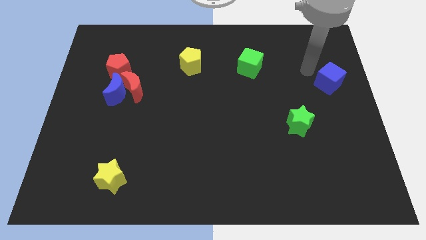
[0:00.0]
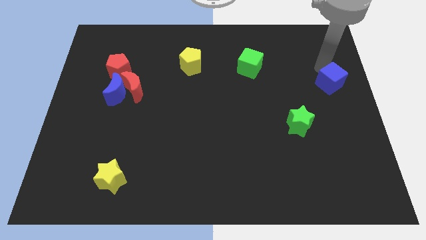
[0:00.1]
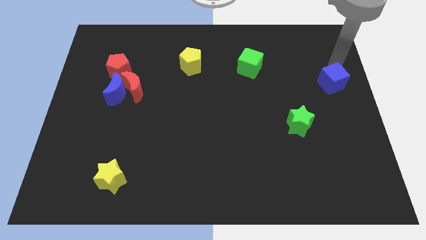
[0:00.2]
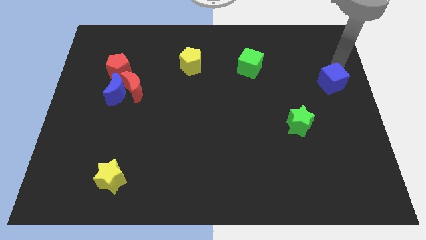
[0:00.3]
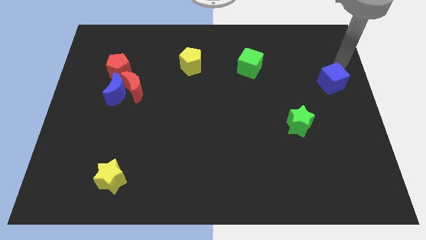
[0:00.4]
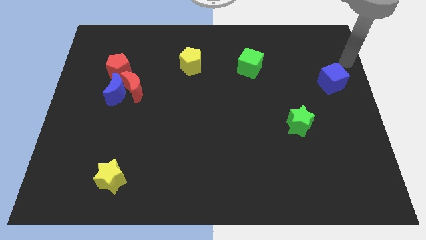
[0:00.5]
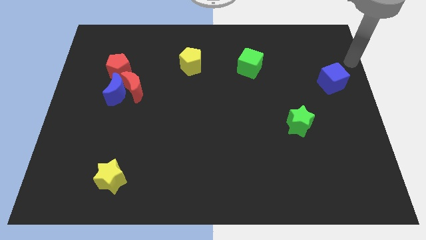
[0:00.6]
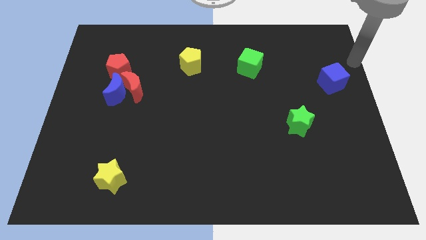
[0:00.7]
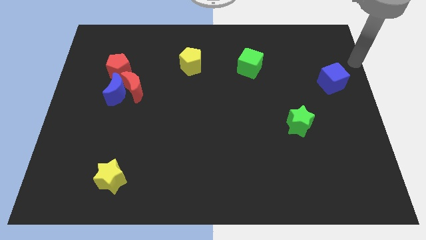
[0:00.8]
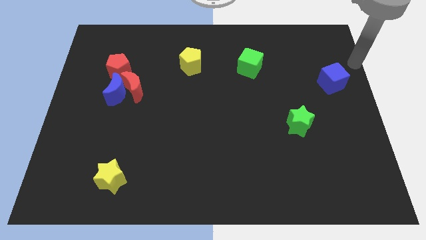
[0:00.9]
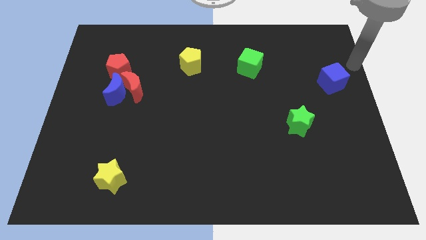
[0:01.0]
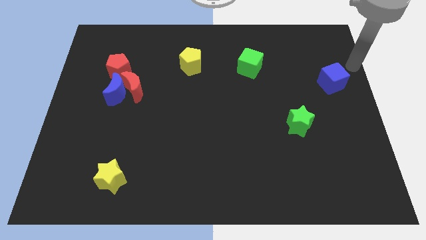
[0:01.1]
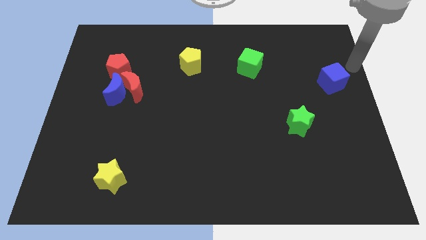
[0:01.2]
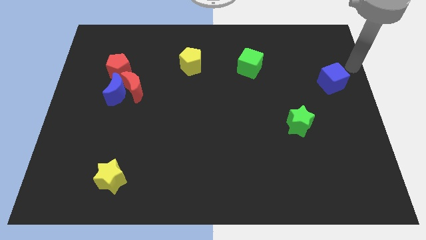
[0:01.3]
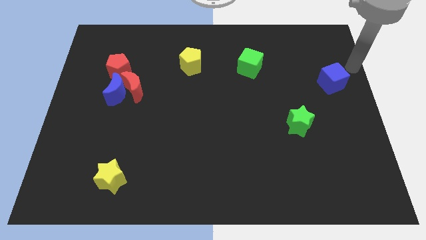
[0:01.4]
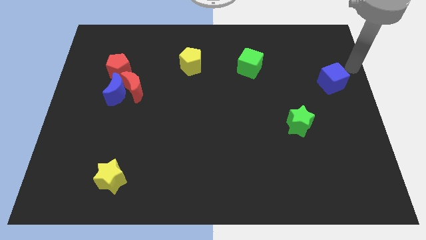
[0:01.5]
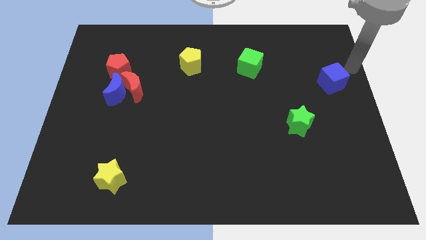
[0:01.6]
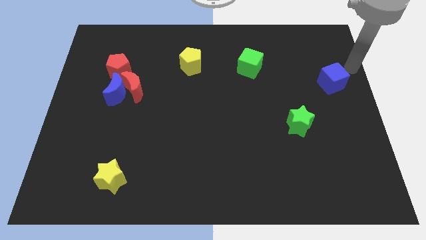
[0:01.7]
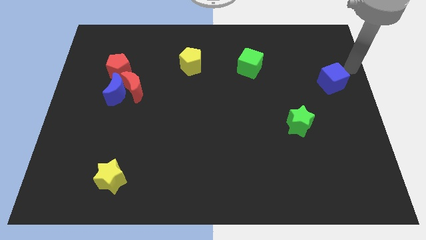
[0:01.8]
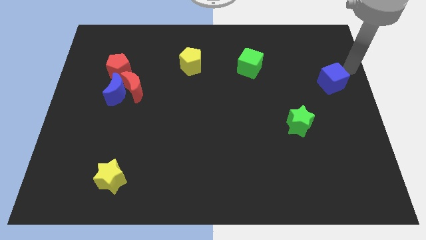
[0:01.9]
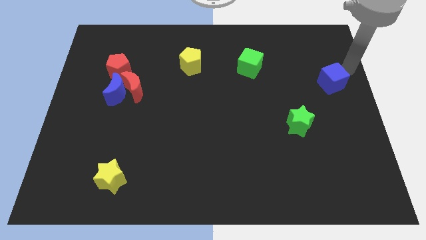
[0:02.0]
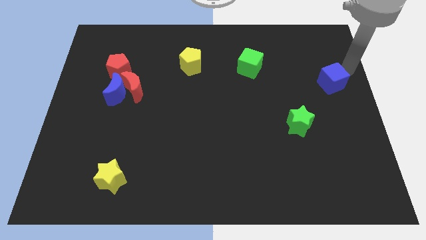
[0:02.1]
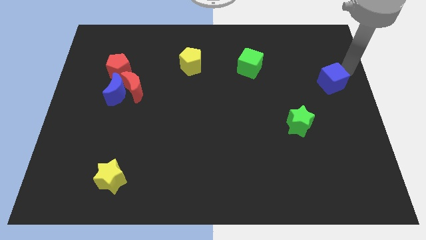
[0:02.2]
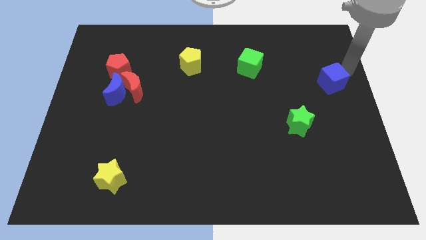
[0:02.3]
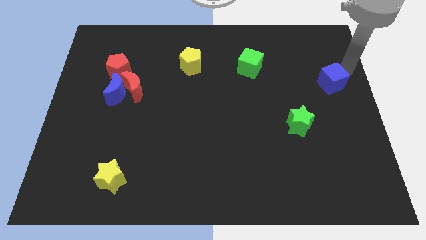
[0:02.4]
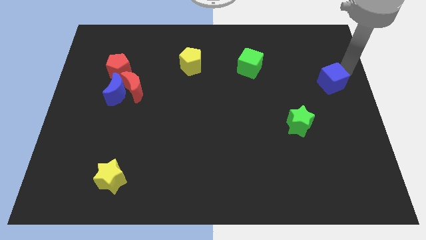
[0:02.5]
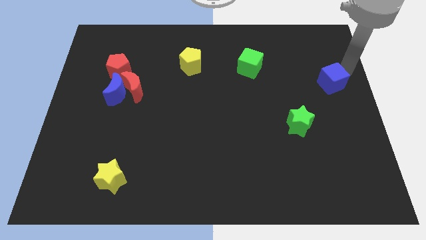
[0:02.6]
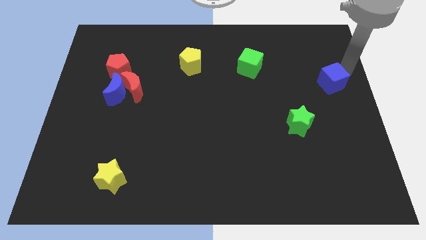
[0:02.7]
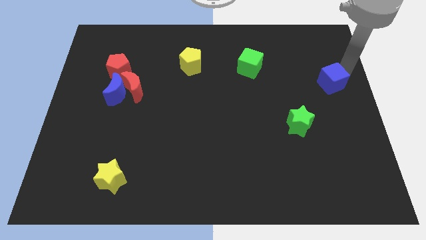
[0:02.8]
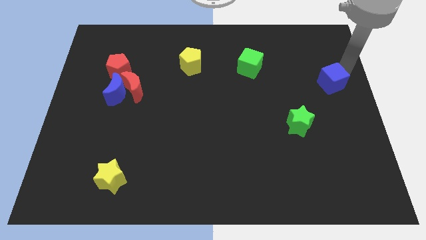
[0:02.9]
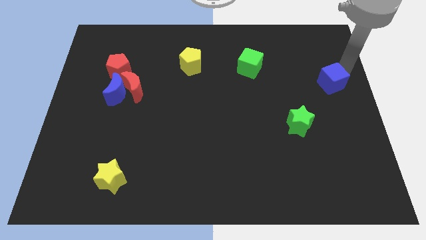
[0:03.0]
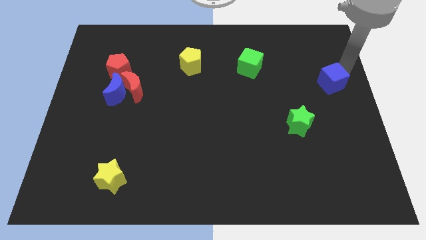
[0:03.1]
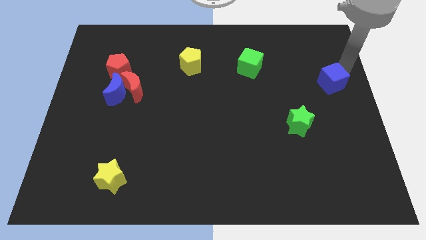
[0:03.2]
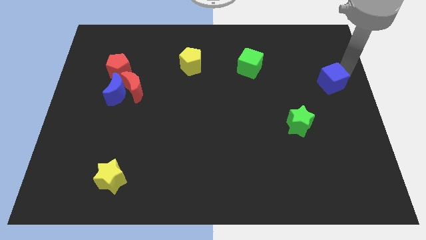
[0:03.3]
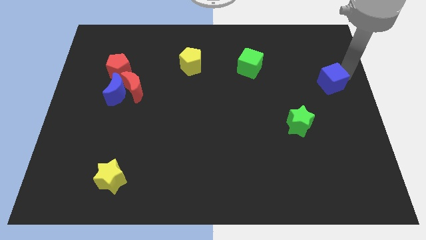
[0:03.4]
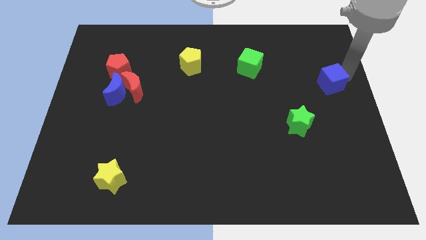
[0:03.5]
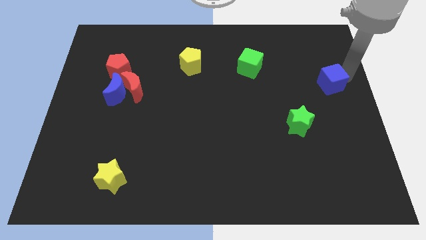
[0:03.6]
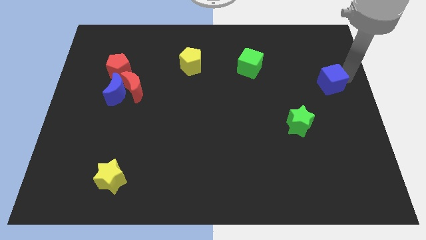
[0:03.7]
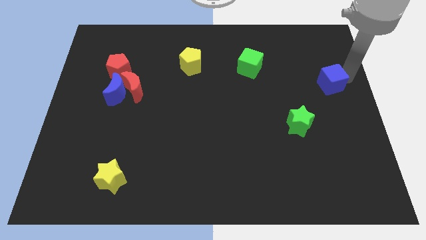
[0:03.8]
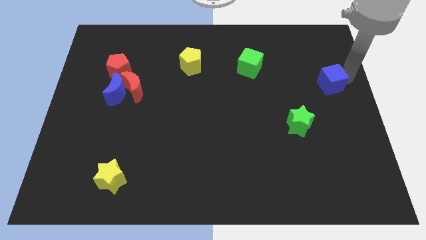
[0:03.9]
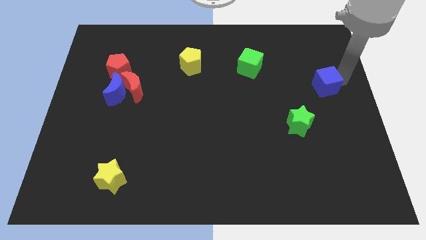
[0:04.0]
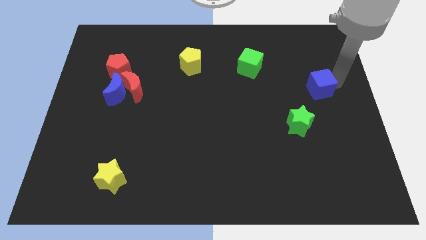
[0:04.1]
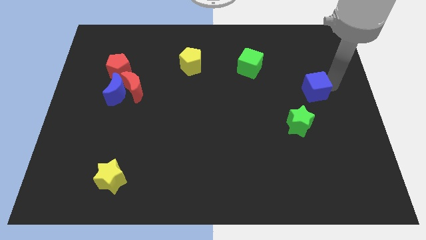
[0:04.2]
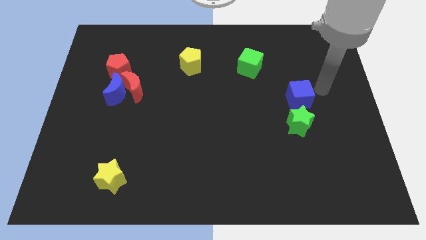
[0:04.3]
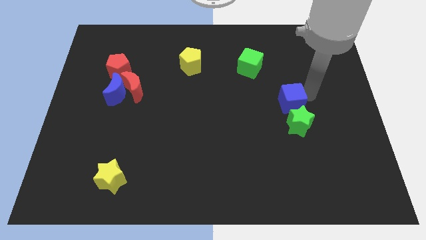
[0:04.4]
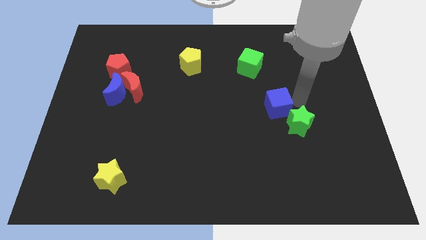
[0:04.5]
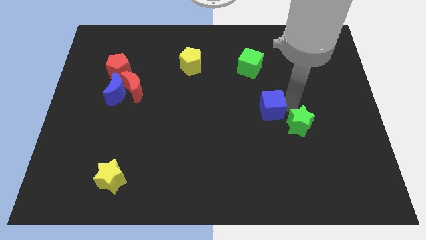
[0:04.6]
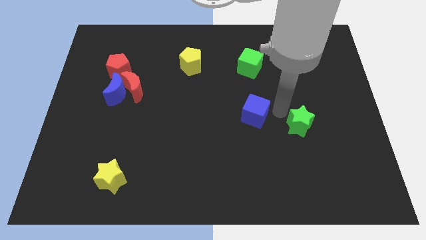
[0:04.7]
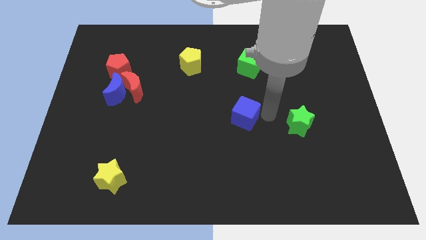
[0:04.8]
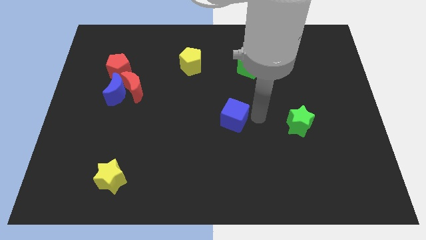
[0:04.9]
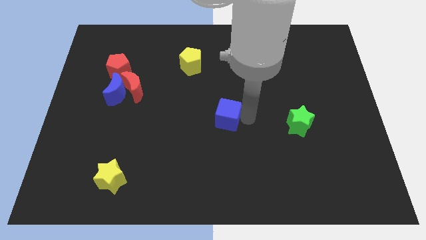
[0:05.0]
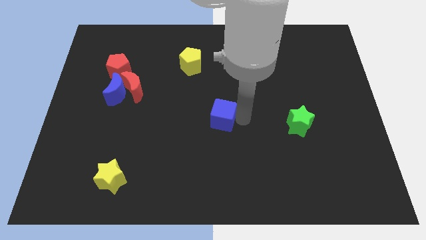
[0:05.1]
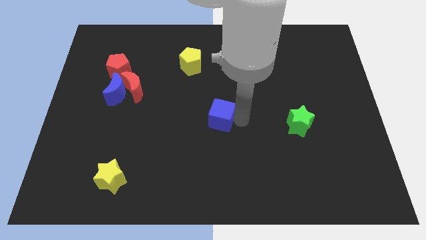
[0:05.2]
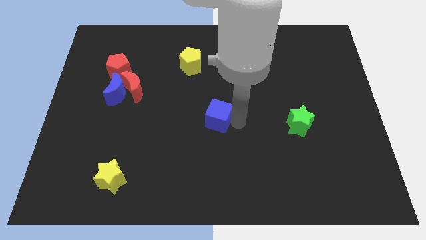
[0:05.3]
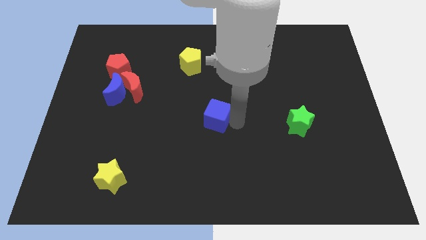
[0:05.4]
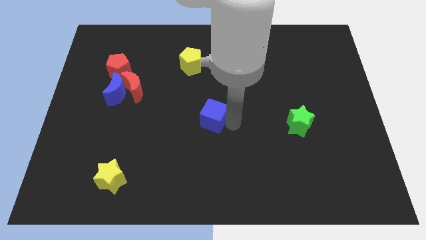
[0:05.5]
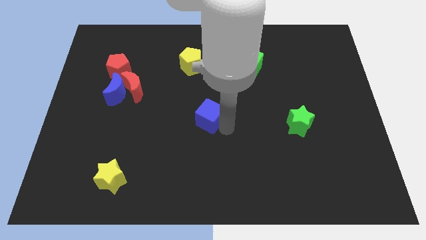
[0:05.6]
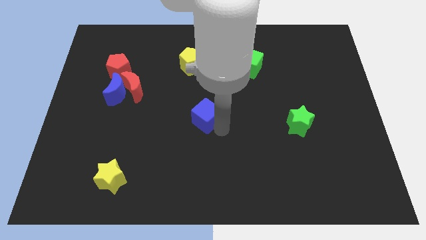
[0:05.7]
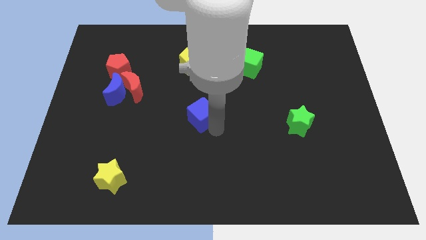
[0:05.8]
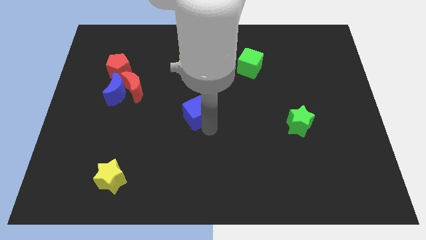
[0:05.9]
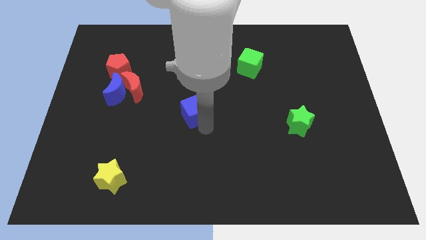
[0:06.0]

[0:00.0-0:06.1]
place the blue cube at the center of the board

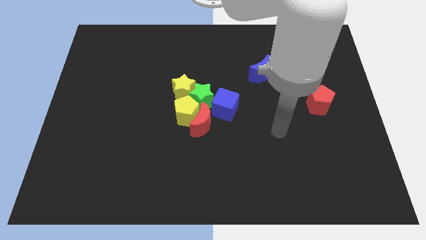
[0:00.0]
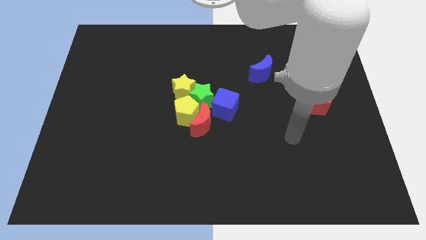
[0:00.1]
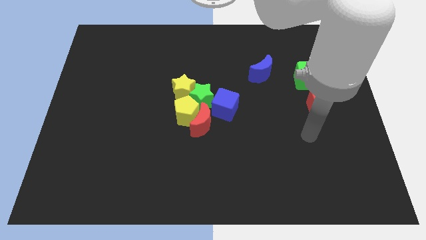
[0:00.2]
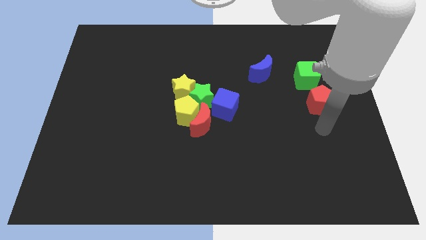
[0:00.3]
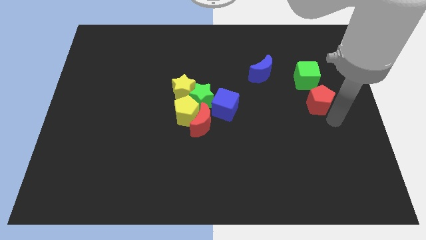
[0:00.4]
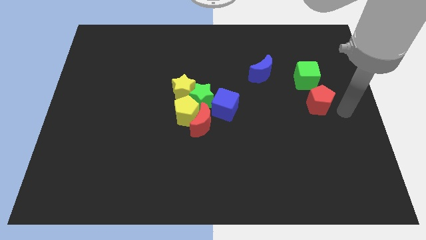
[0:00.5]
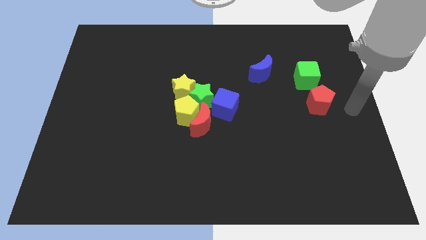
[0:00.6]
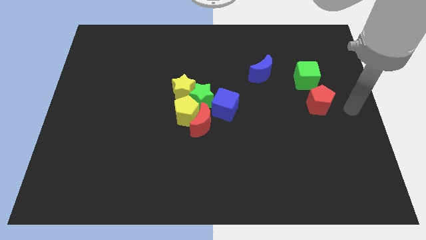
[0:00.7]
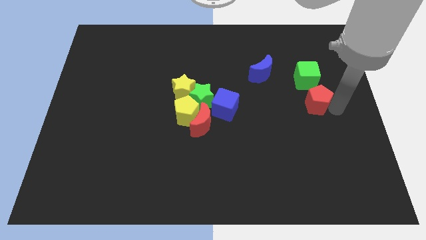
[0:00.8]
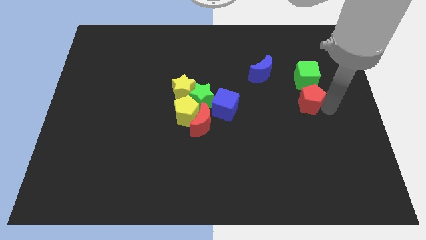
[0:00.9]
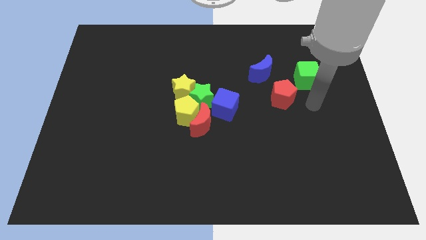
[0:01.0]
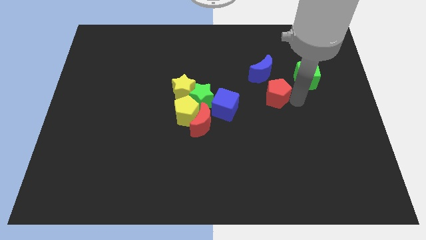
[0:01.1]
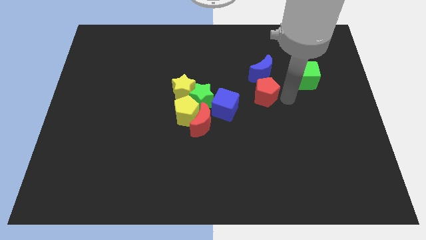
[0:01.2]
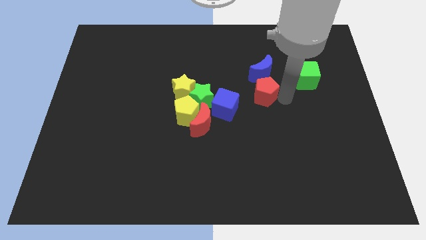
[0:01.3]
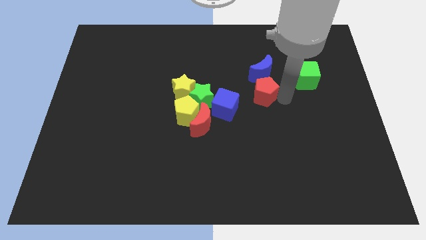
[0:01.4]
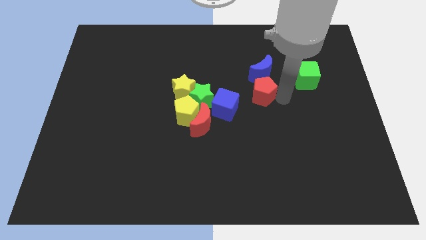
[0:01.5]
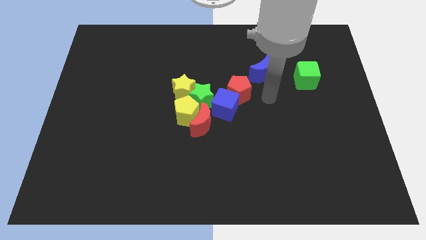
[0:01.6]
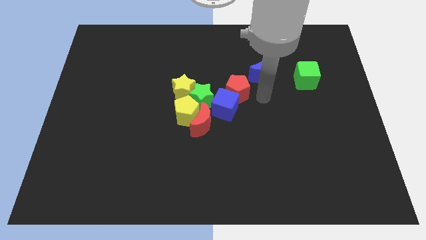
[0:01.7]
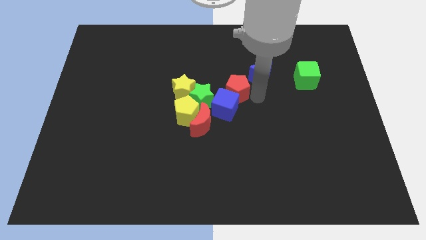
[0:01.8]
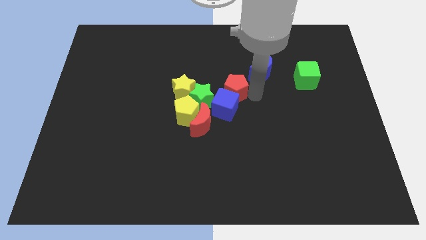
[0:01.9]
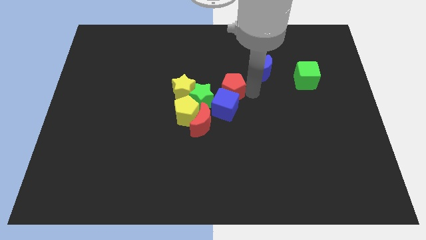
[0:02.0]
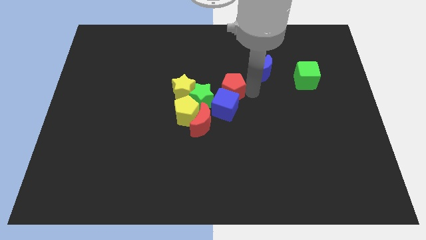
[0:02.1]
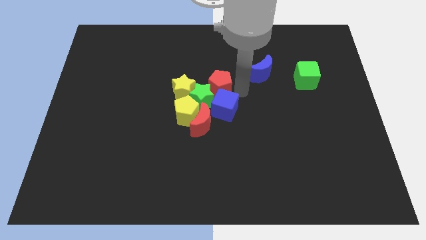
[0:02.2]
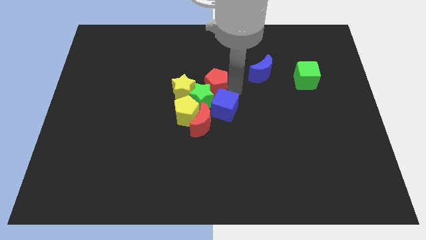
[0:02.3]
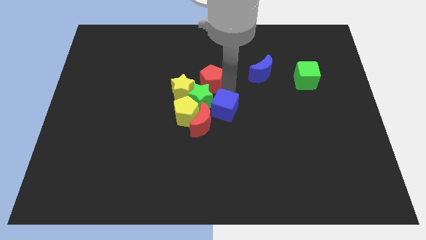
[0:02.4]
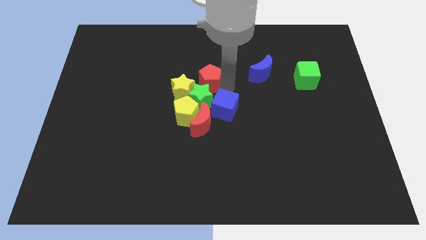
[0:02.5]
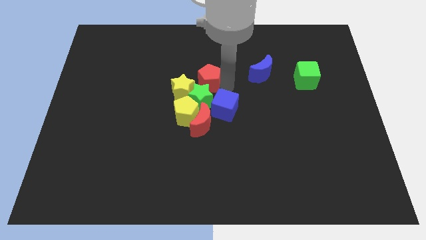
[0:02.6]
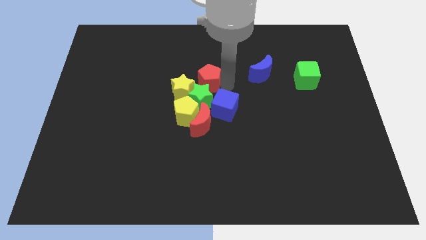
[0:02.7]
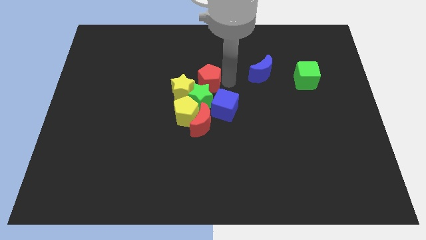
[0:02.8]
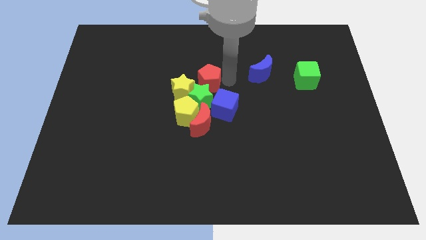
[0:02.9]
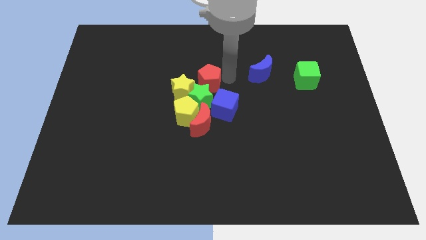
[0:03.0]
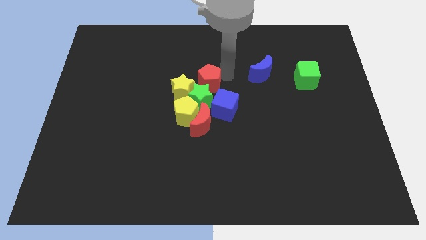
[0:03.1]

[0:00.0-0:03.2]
place red pentagon on top of green star
